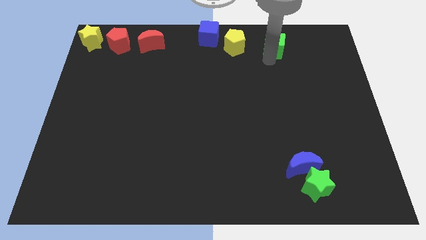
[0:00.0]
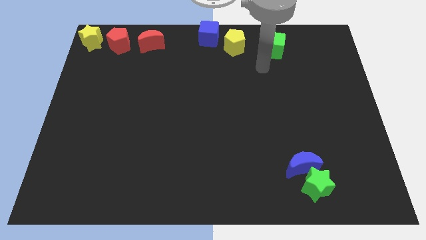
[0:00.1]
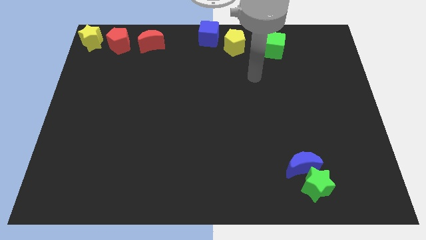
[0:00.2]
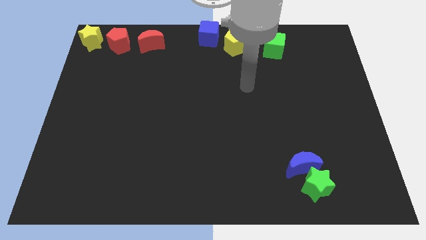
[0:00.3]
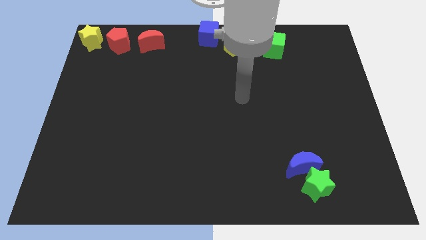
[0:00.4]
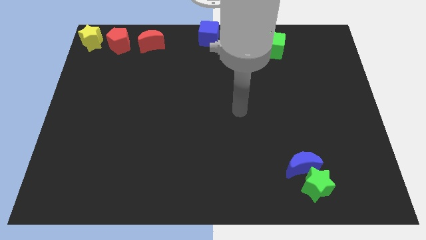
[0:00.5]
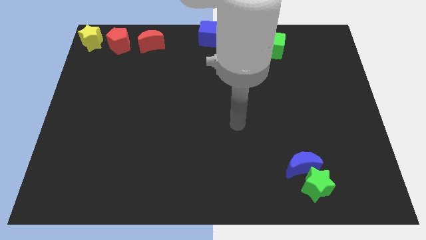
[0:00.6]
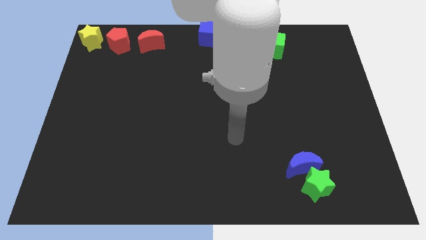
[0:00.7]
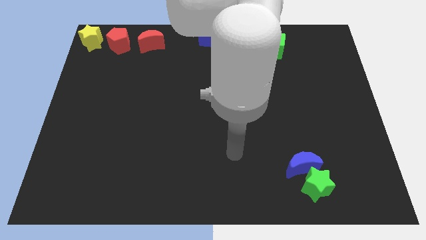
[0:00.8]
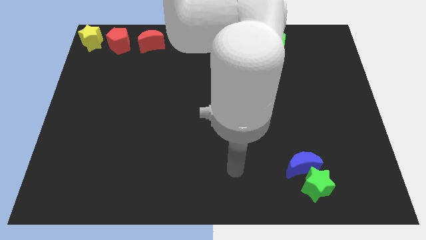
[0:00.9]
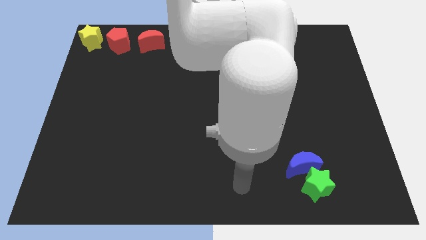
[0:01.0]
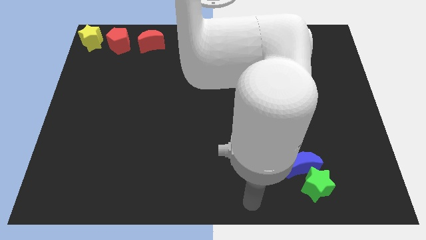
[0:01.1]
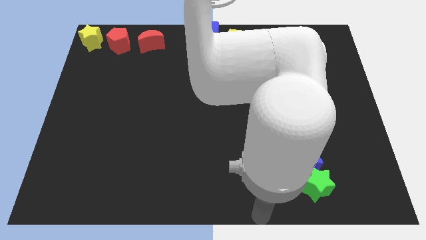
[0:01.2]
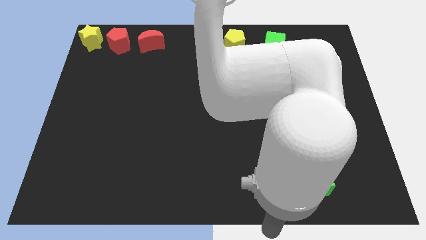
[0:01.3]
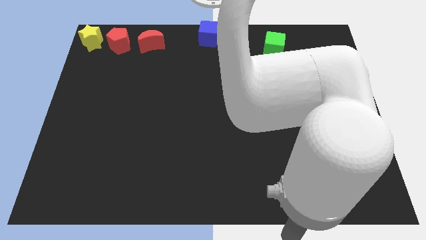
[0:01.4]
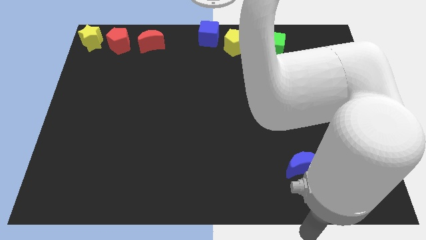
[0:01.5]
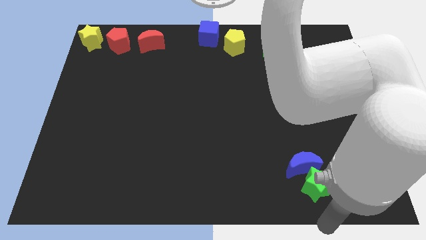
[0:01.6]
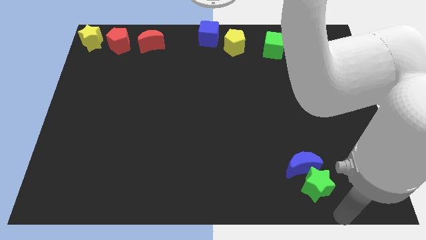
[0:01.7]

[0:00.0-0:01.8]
move your arm to the bottom of the green star

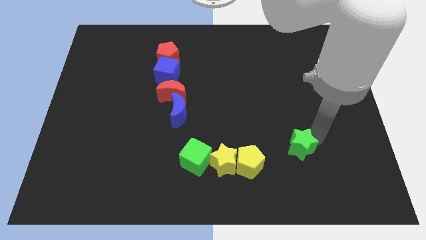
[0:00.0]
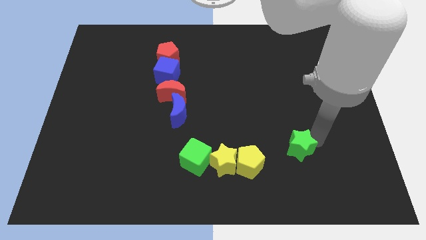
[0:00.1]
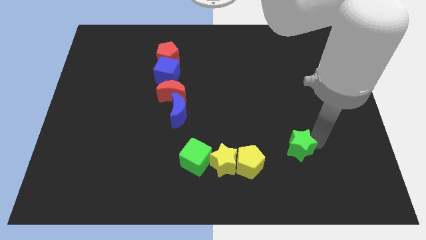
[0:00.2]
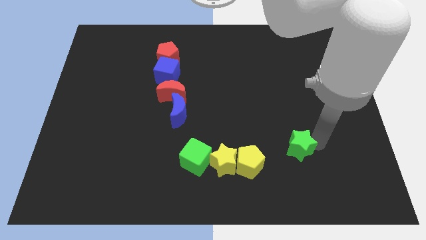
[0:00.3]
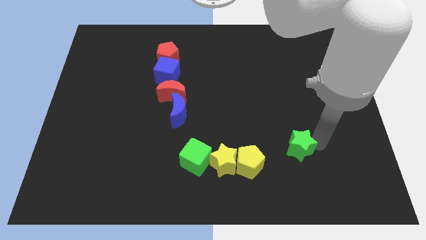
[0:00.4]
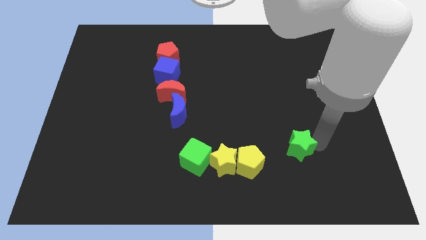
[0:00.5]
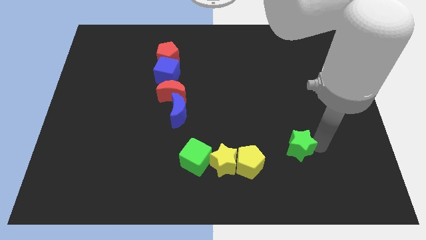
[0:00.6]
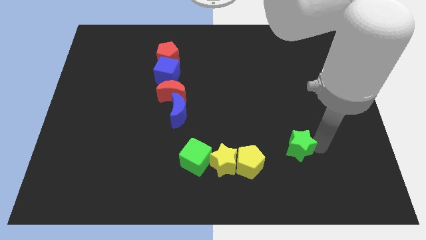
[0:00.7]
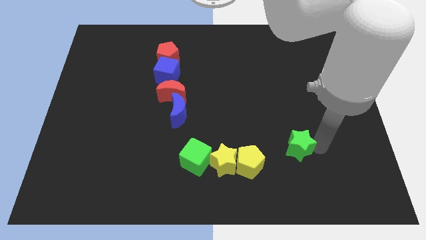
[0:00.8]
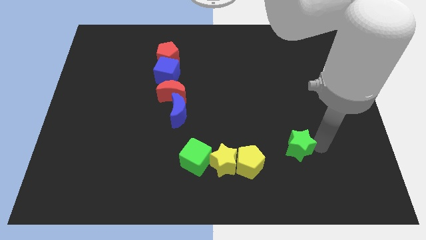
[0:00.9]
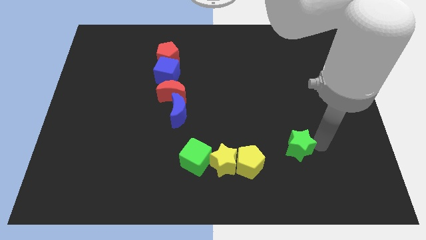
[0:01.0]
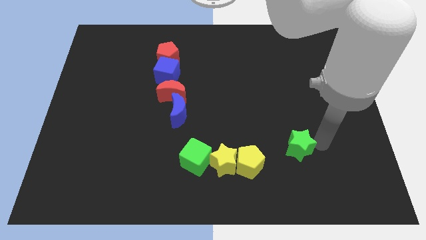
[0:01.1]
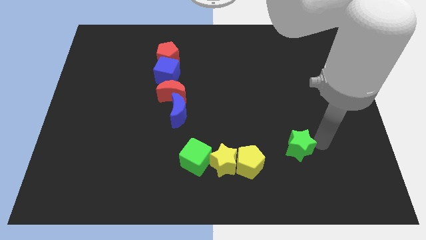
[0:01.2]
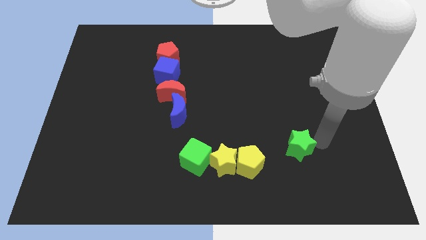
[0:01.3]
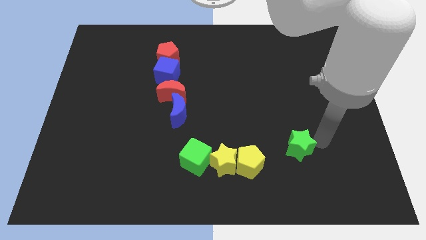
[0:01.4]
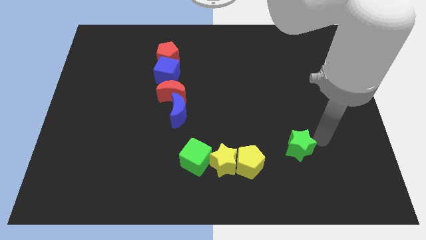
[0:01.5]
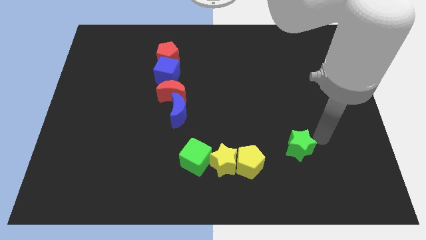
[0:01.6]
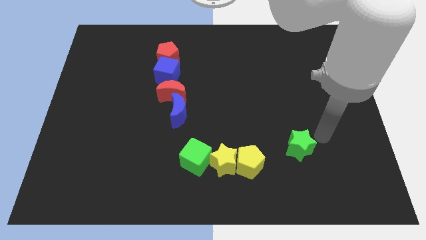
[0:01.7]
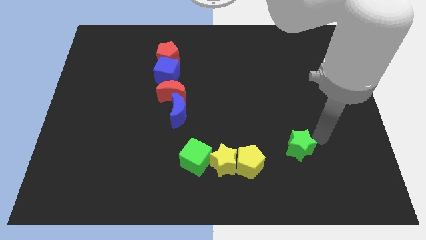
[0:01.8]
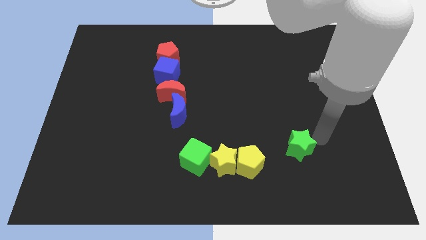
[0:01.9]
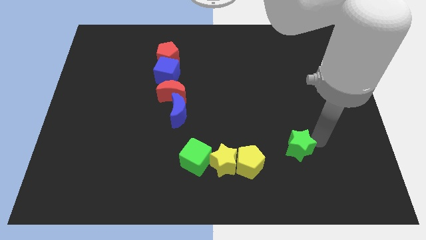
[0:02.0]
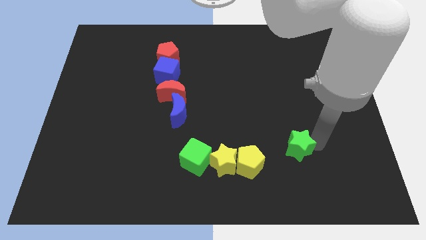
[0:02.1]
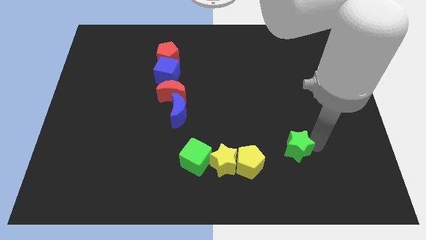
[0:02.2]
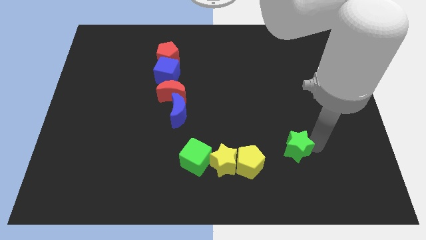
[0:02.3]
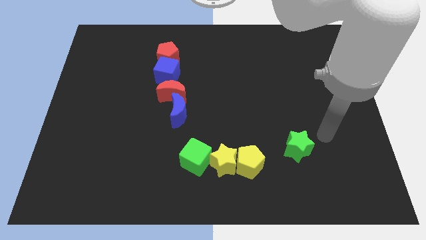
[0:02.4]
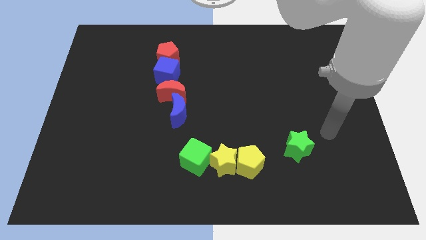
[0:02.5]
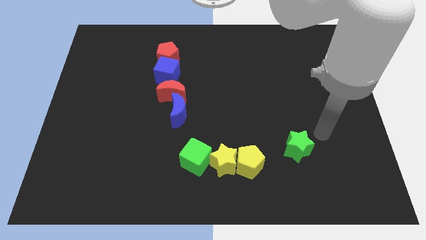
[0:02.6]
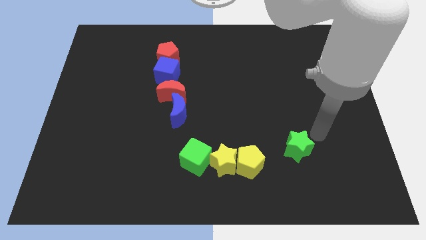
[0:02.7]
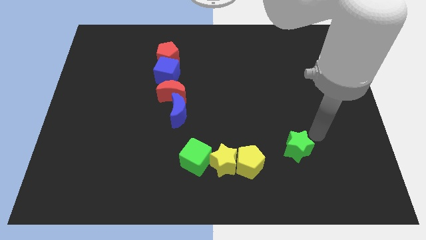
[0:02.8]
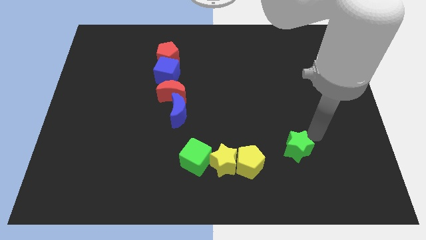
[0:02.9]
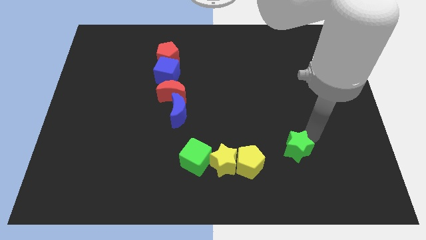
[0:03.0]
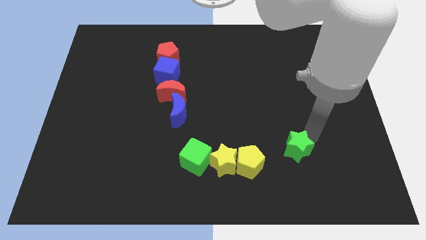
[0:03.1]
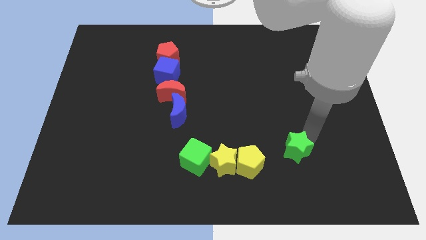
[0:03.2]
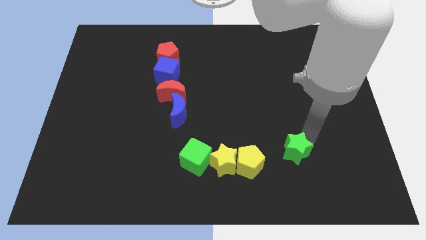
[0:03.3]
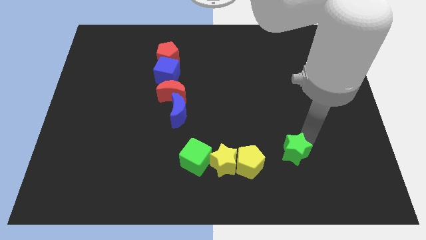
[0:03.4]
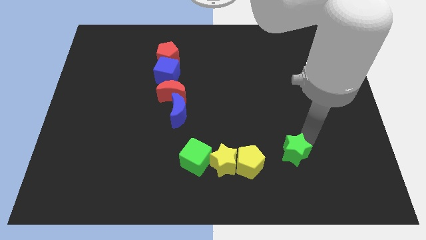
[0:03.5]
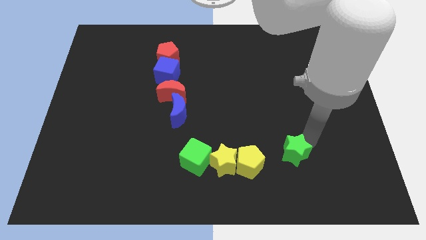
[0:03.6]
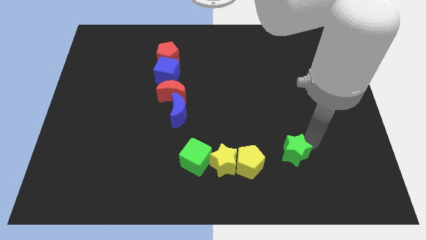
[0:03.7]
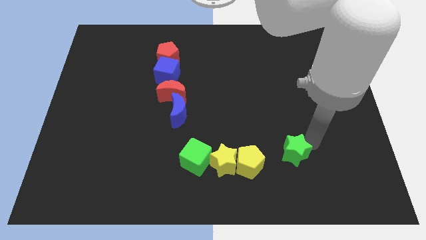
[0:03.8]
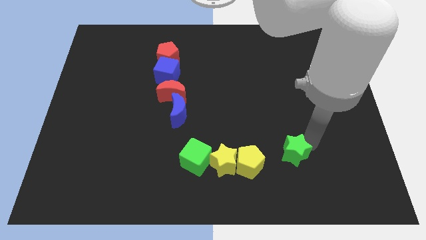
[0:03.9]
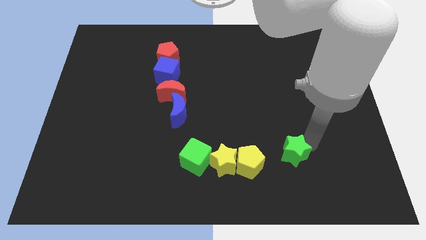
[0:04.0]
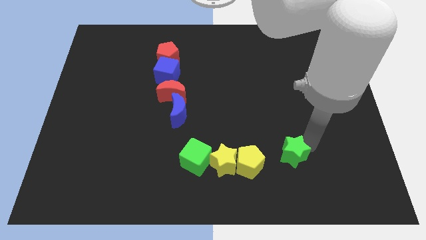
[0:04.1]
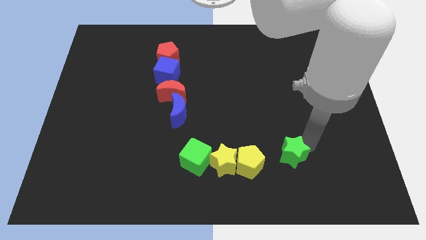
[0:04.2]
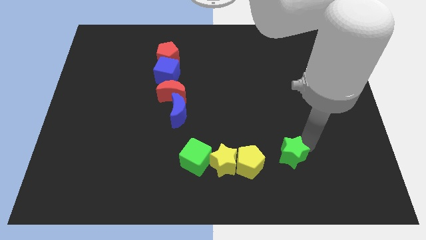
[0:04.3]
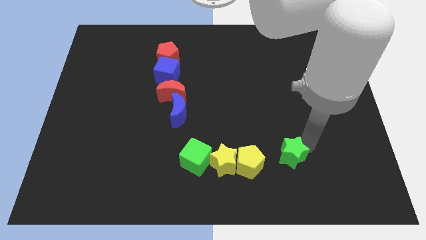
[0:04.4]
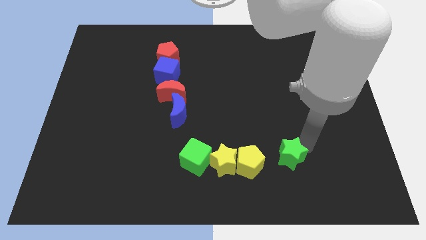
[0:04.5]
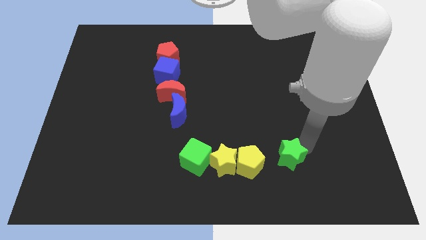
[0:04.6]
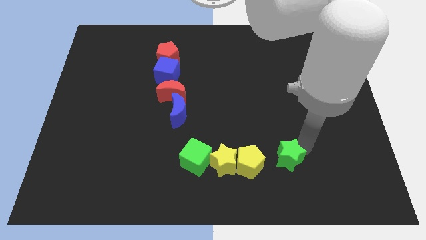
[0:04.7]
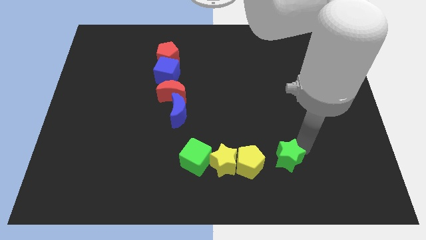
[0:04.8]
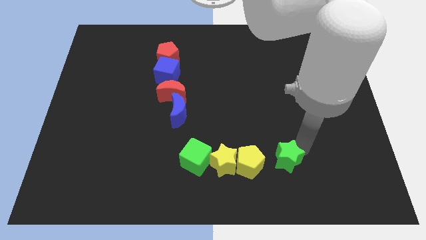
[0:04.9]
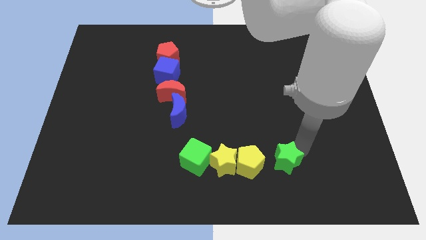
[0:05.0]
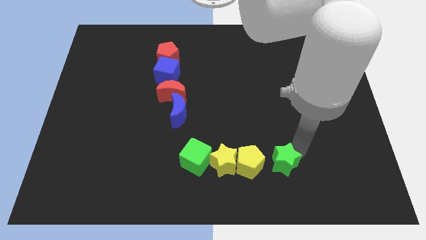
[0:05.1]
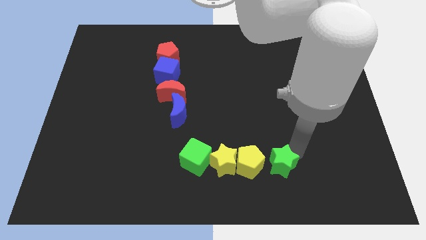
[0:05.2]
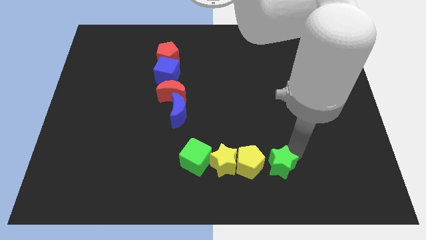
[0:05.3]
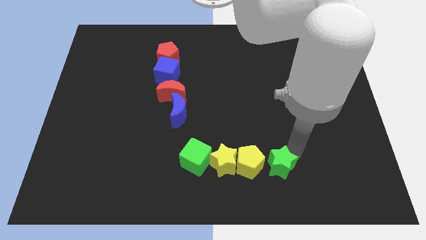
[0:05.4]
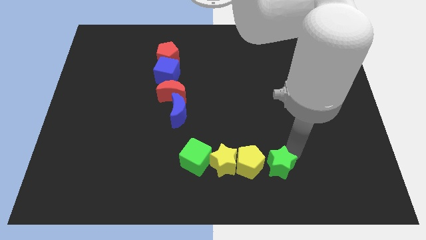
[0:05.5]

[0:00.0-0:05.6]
drag the green star close to the right side of the yellow pentagon

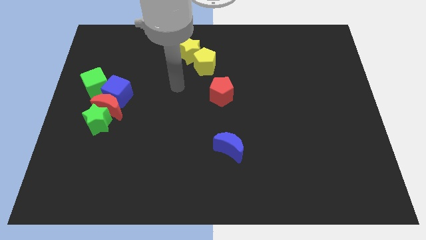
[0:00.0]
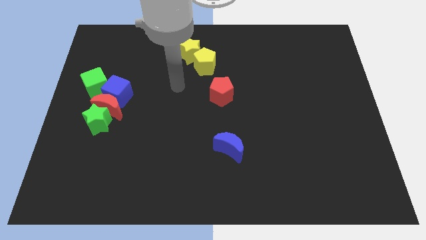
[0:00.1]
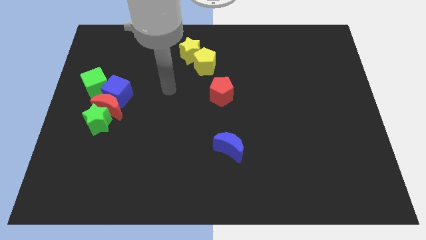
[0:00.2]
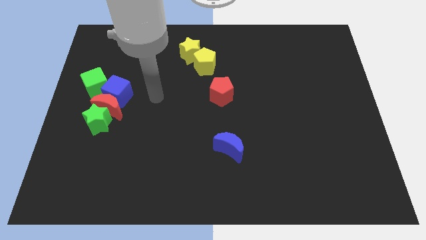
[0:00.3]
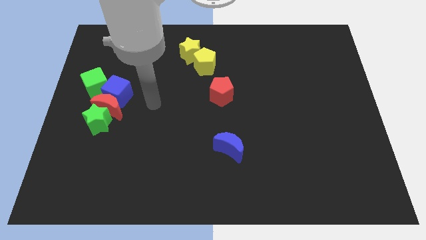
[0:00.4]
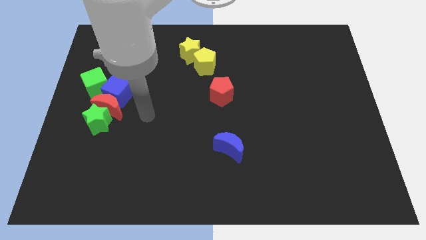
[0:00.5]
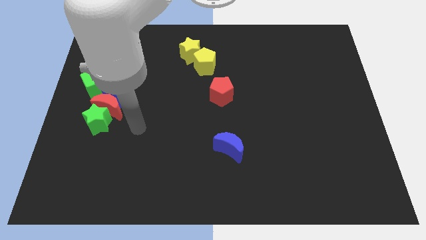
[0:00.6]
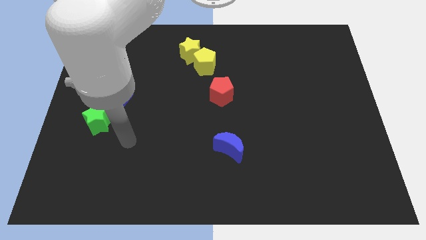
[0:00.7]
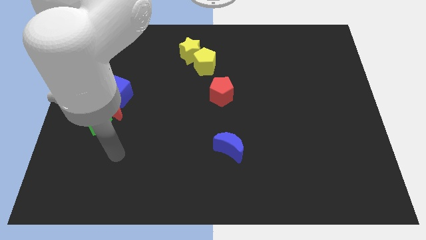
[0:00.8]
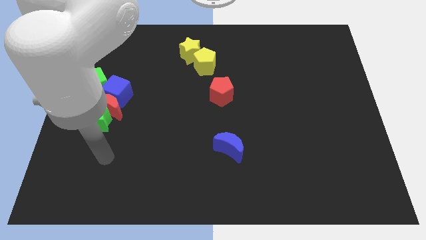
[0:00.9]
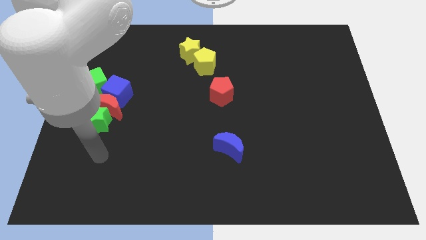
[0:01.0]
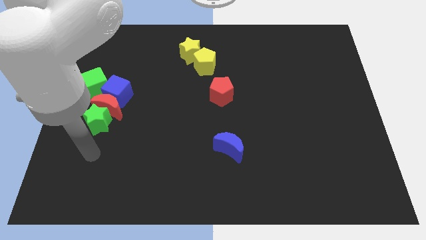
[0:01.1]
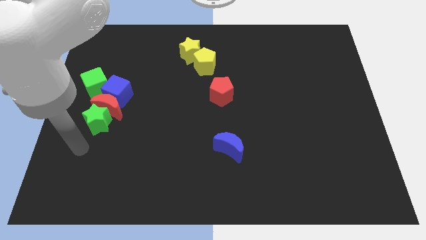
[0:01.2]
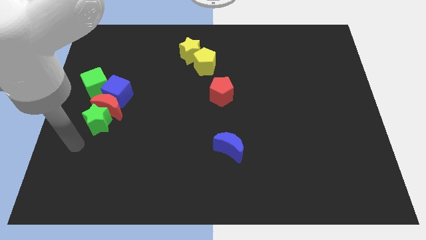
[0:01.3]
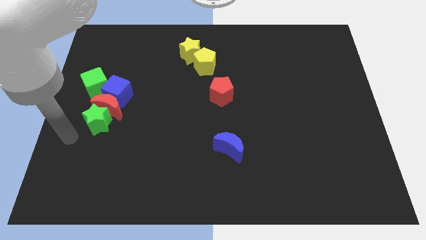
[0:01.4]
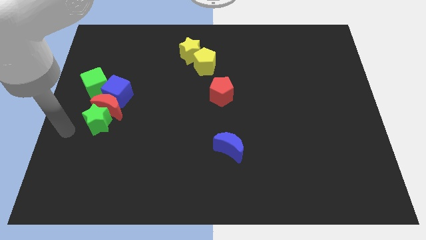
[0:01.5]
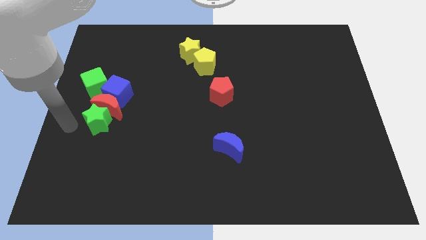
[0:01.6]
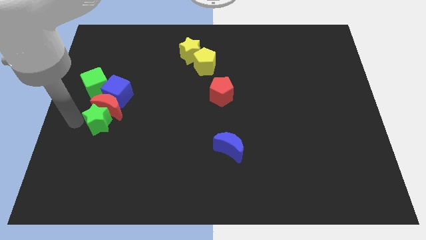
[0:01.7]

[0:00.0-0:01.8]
point your arm at the left of the green star
